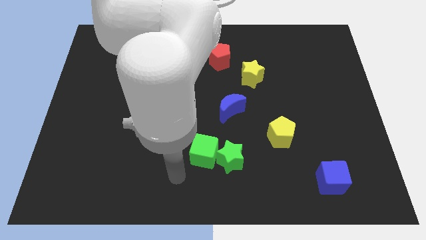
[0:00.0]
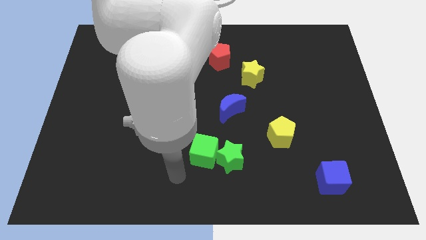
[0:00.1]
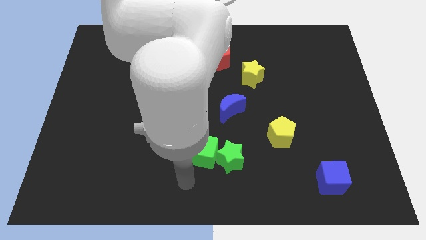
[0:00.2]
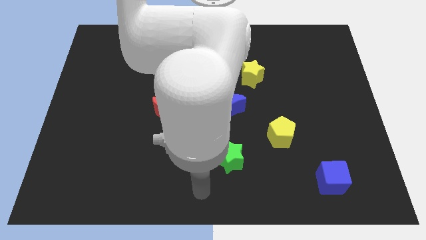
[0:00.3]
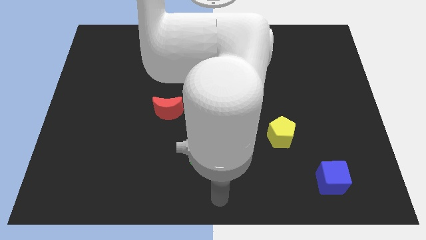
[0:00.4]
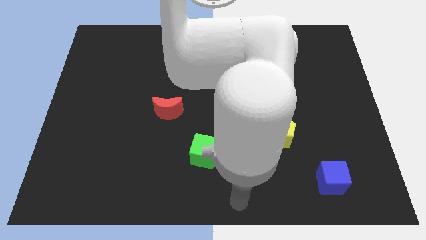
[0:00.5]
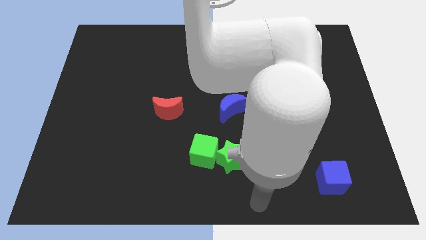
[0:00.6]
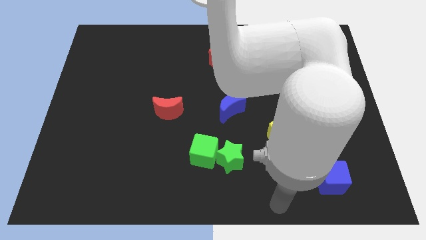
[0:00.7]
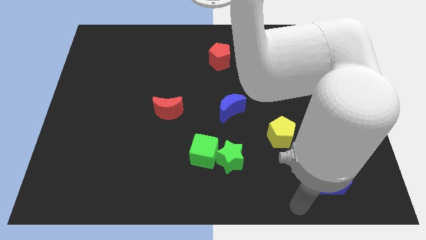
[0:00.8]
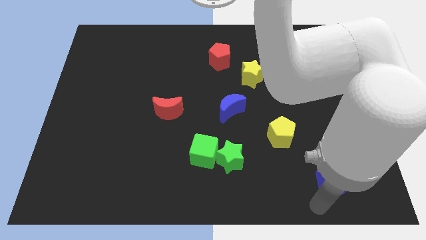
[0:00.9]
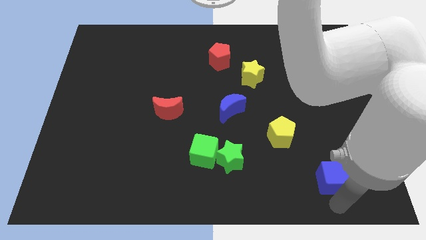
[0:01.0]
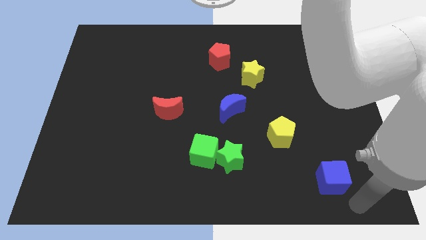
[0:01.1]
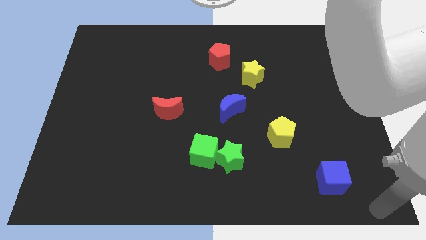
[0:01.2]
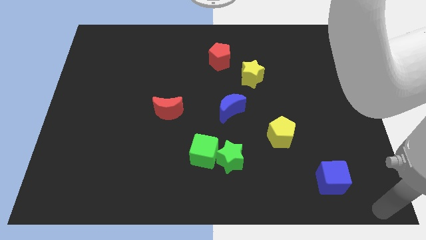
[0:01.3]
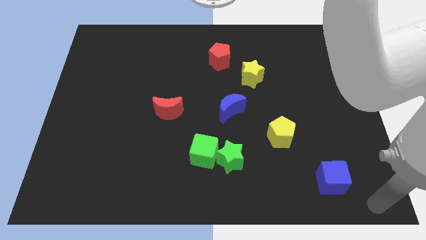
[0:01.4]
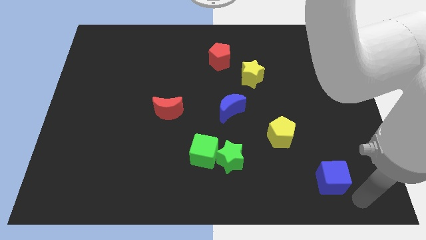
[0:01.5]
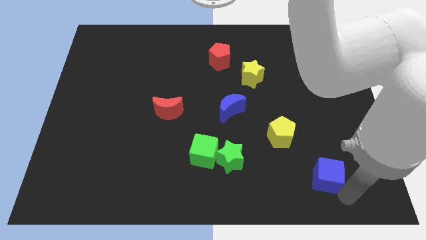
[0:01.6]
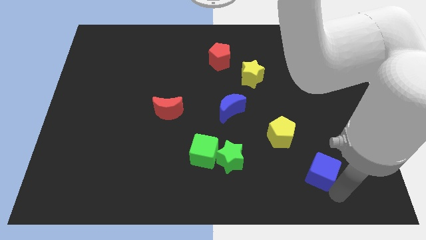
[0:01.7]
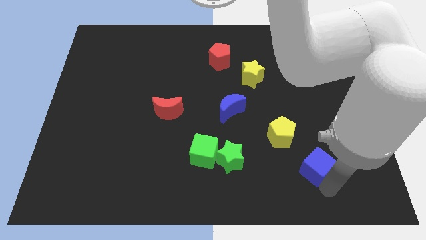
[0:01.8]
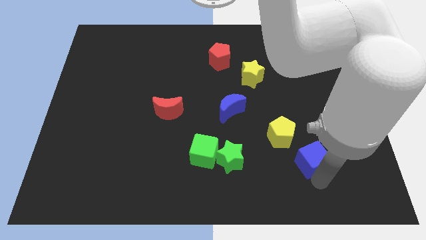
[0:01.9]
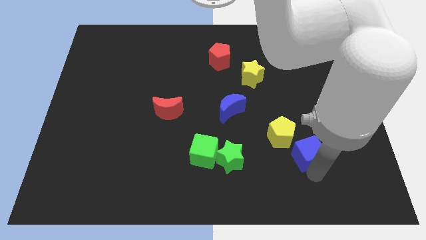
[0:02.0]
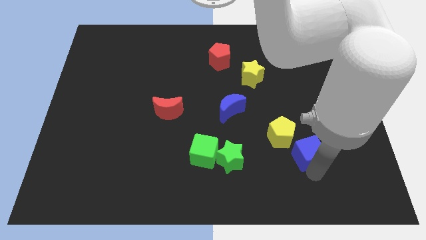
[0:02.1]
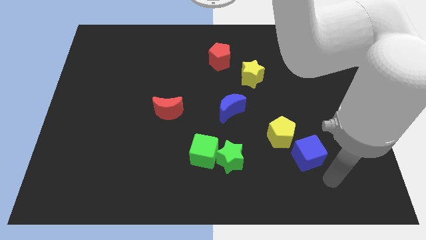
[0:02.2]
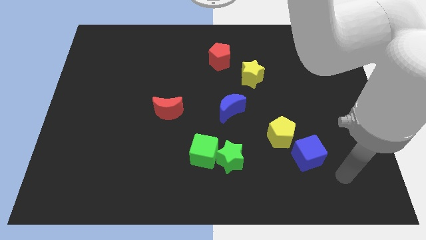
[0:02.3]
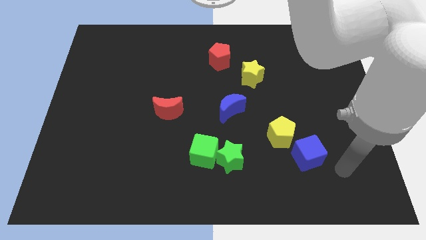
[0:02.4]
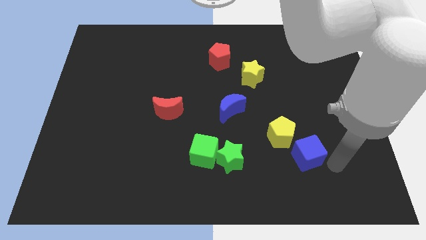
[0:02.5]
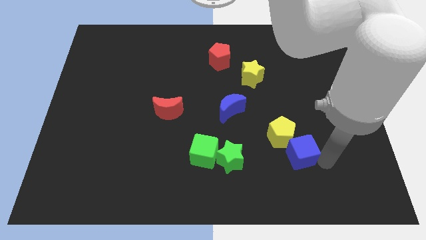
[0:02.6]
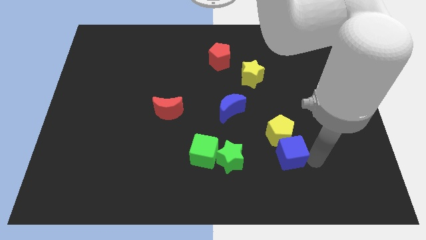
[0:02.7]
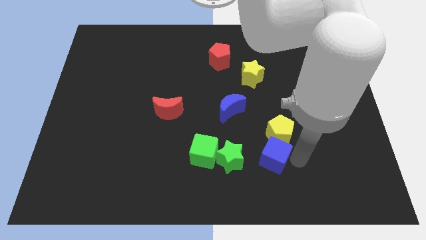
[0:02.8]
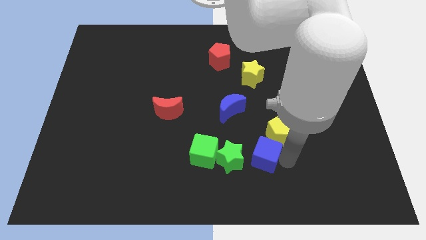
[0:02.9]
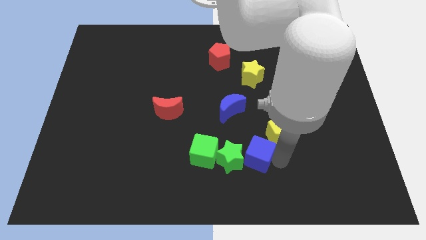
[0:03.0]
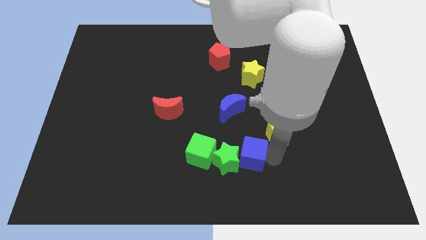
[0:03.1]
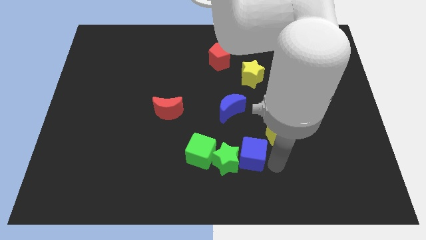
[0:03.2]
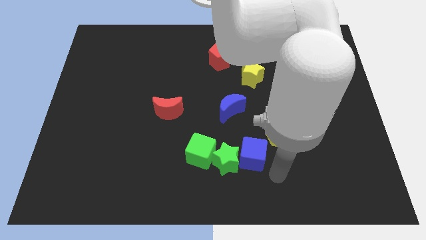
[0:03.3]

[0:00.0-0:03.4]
move blue cube to the right of green star

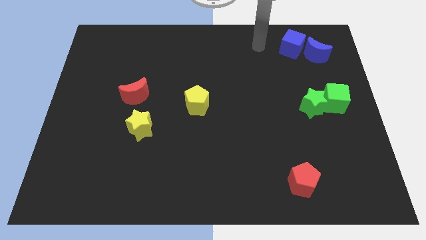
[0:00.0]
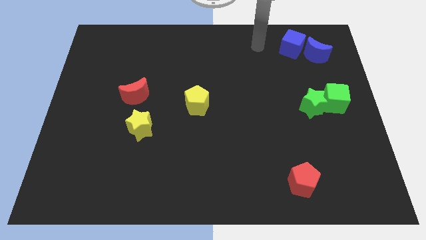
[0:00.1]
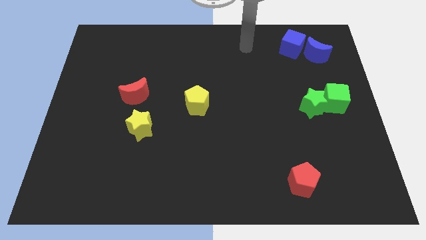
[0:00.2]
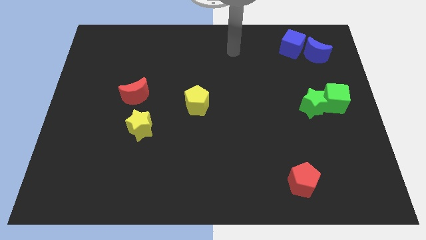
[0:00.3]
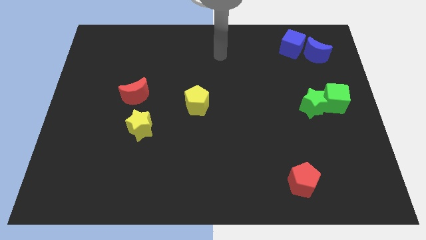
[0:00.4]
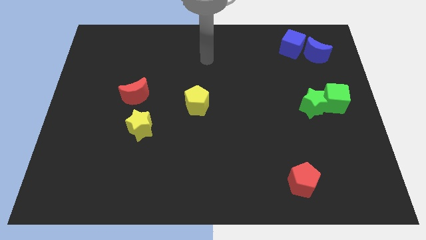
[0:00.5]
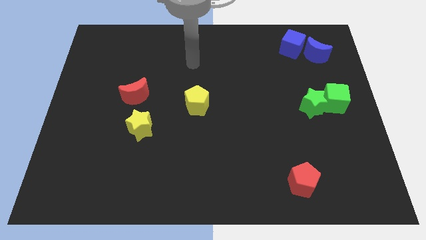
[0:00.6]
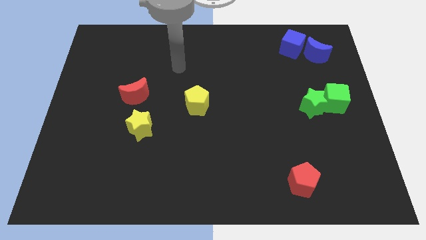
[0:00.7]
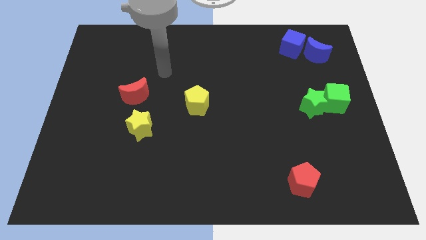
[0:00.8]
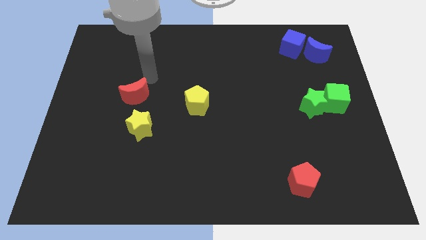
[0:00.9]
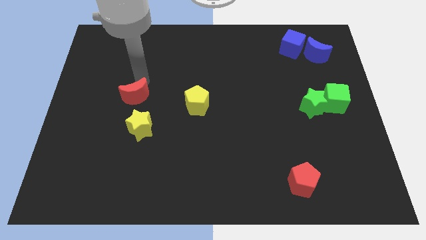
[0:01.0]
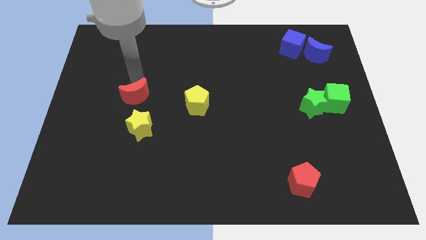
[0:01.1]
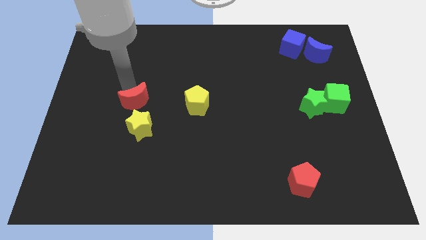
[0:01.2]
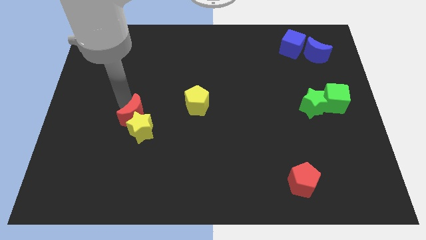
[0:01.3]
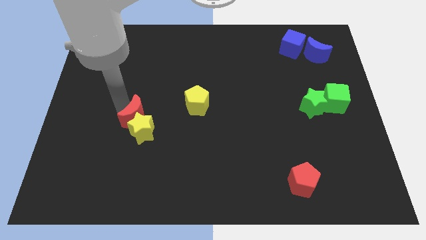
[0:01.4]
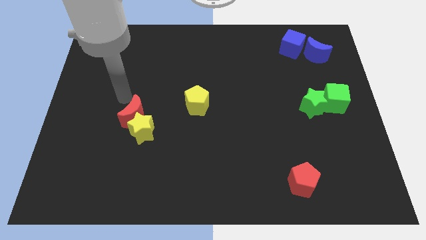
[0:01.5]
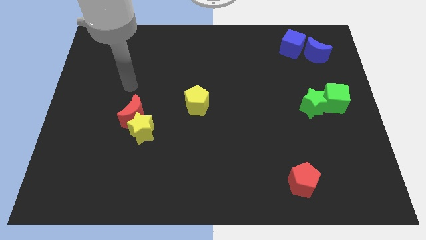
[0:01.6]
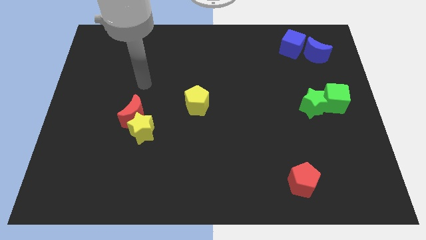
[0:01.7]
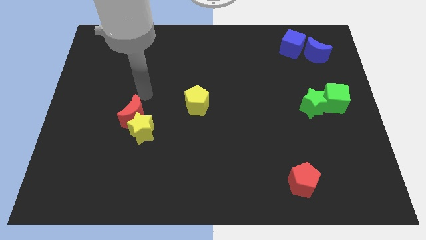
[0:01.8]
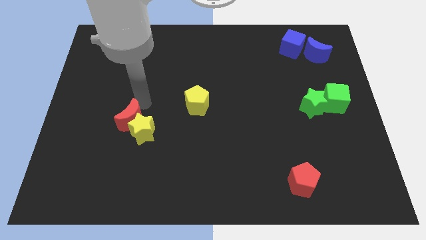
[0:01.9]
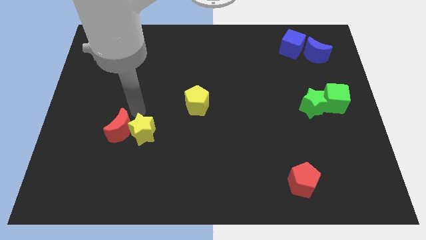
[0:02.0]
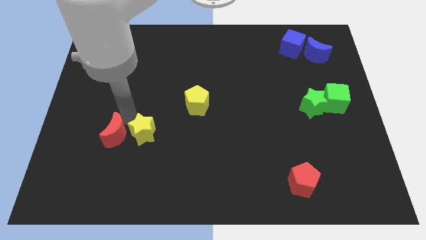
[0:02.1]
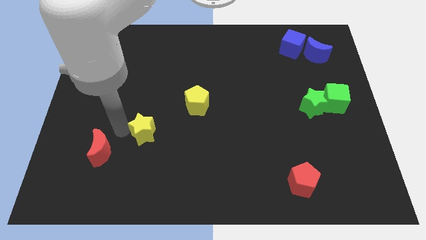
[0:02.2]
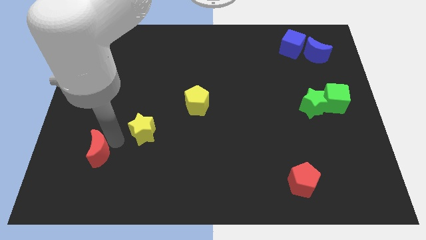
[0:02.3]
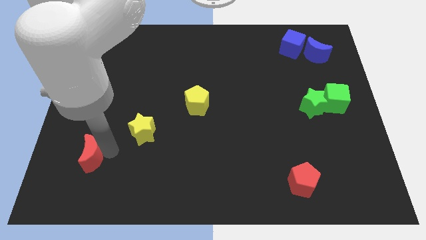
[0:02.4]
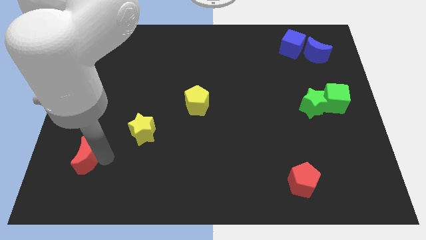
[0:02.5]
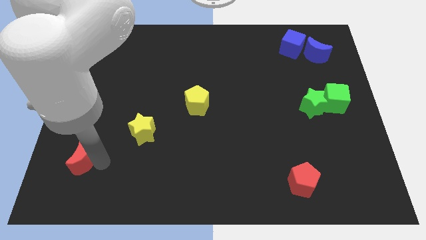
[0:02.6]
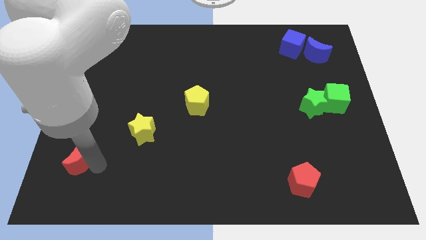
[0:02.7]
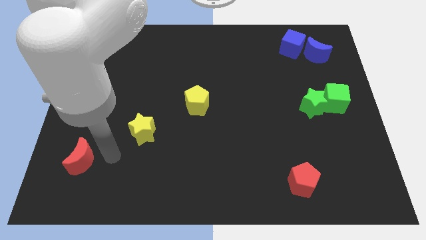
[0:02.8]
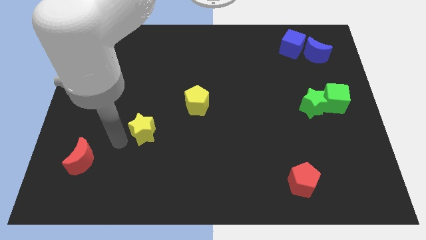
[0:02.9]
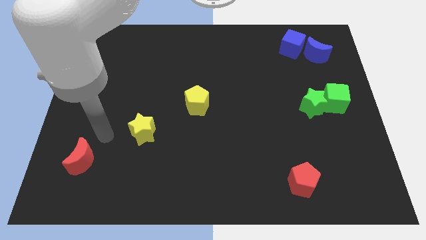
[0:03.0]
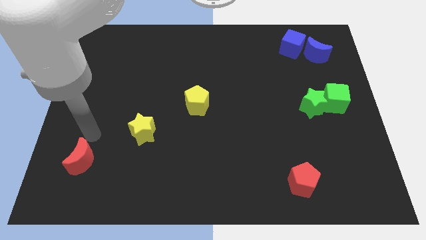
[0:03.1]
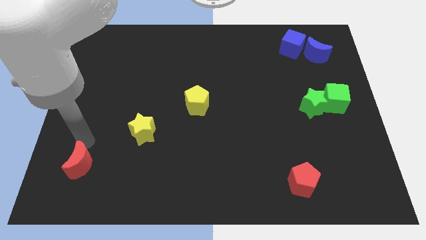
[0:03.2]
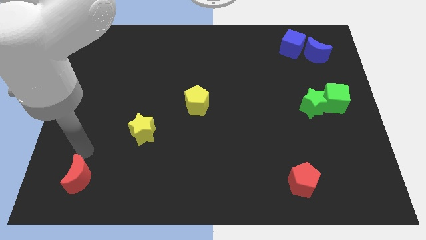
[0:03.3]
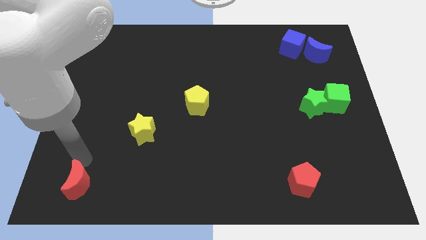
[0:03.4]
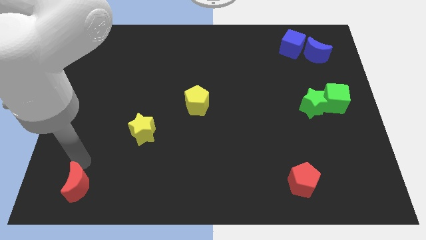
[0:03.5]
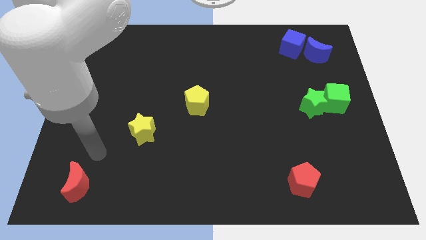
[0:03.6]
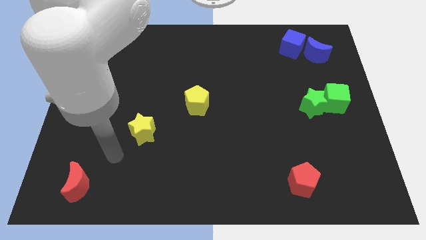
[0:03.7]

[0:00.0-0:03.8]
move the red crescent to the bottom left of the board

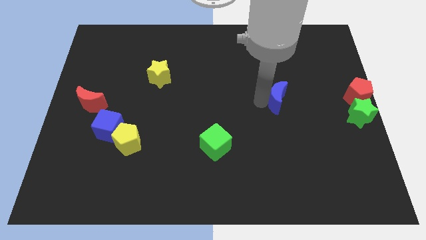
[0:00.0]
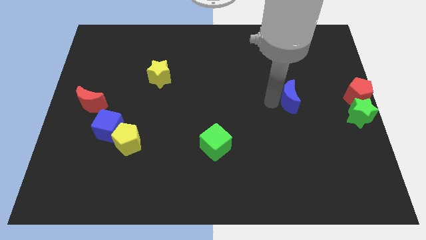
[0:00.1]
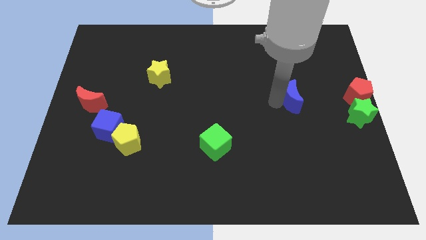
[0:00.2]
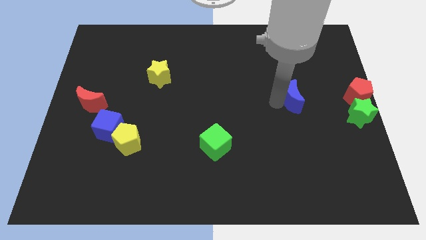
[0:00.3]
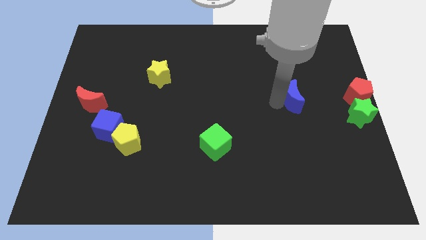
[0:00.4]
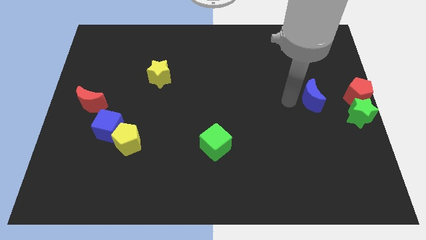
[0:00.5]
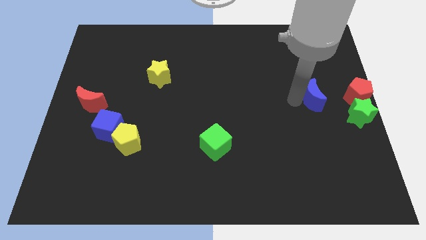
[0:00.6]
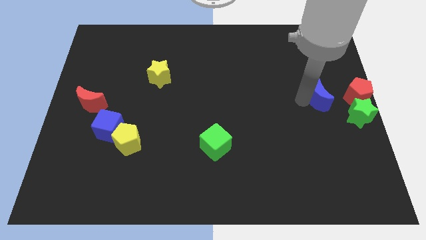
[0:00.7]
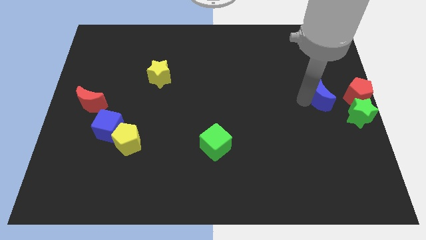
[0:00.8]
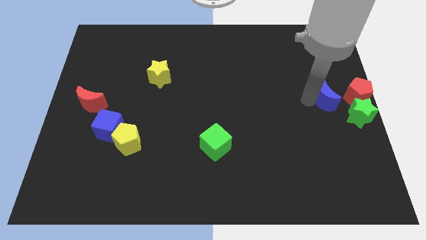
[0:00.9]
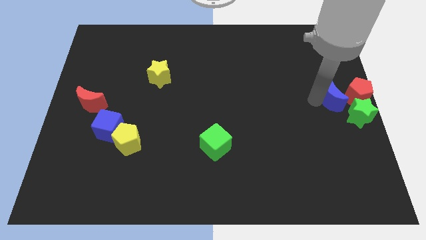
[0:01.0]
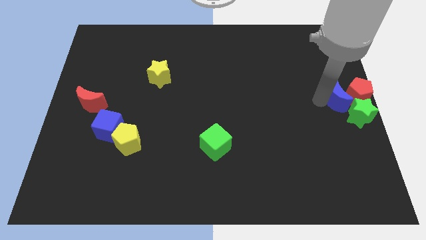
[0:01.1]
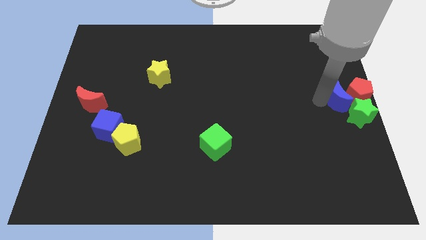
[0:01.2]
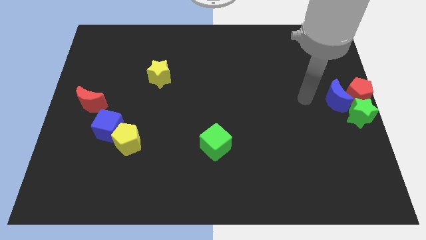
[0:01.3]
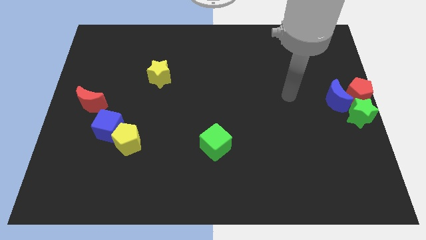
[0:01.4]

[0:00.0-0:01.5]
push the blue crescent into the red pentagon

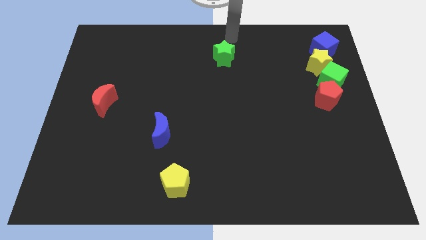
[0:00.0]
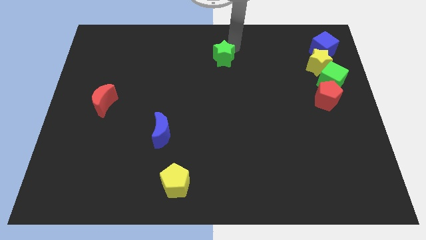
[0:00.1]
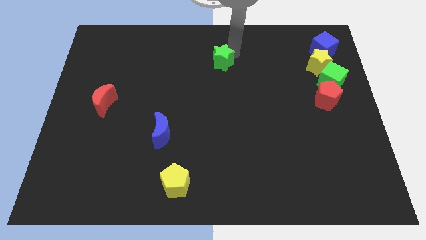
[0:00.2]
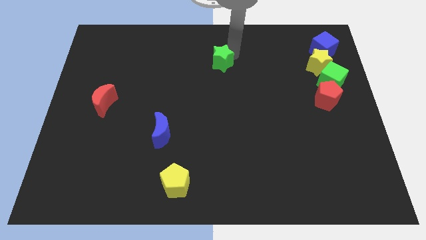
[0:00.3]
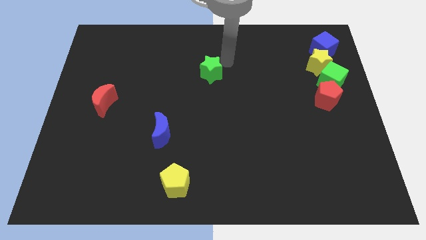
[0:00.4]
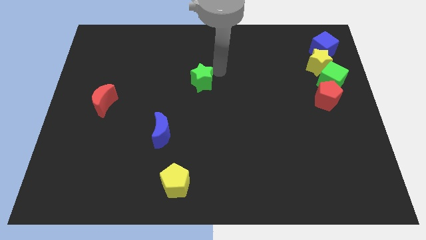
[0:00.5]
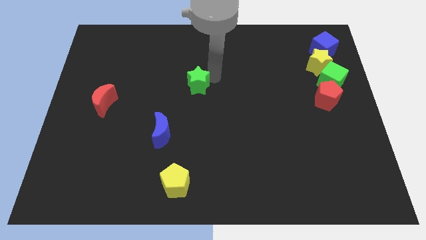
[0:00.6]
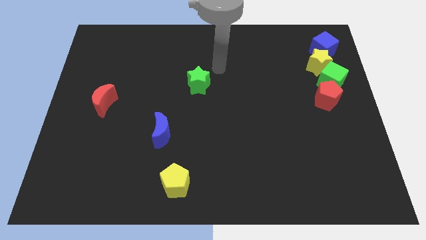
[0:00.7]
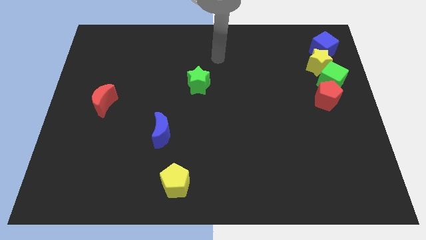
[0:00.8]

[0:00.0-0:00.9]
drag the green star slightly down
